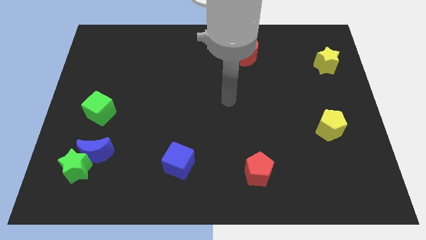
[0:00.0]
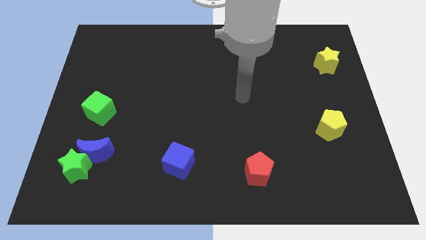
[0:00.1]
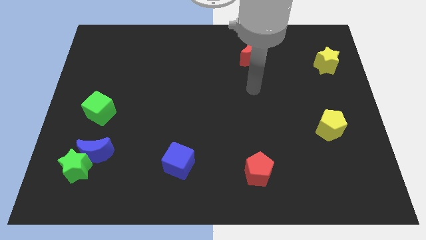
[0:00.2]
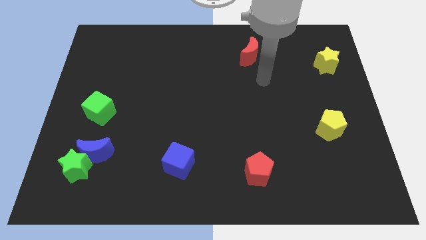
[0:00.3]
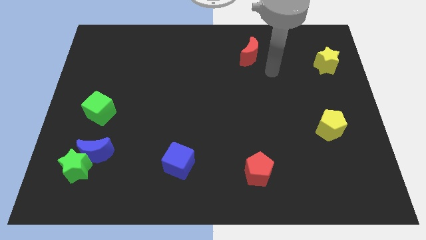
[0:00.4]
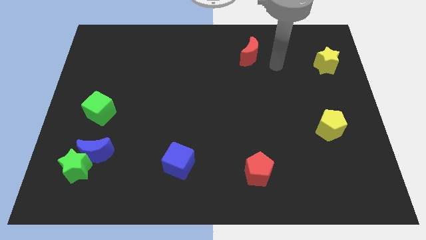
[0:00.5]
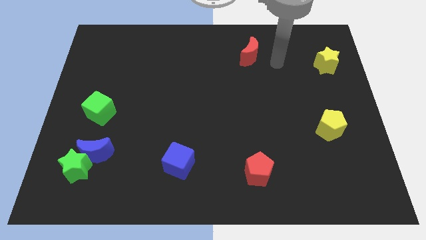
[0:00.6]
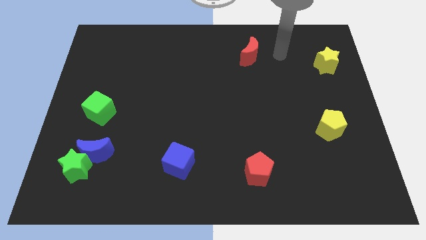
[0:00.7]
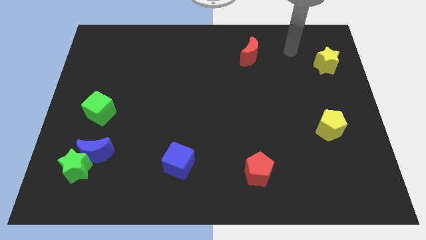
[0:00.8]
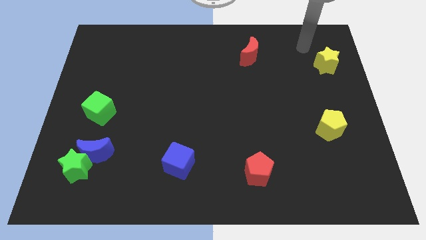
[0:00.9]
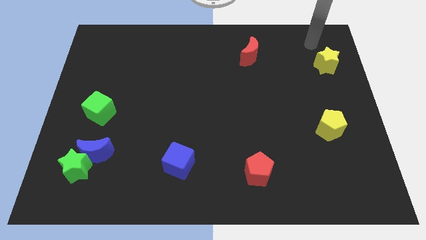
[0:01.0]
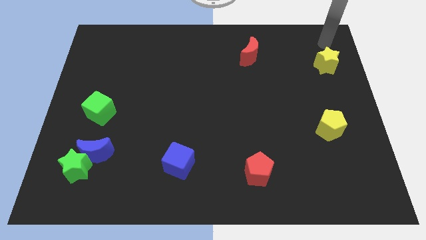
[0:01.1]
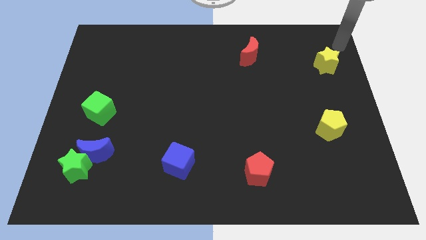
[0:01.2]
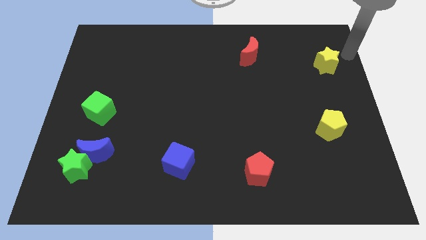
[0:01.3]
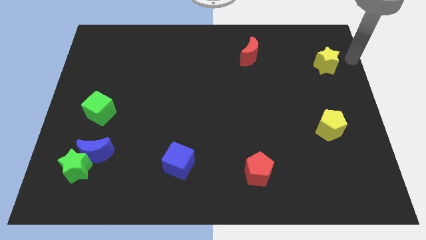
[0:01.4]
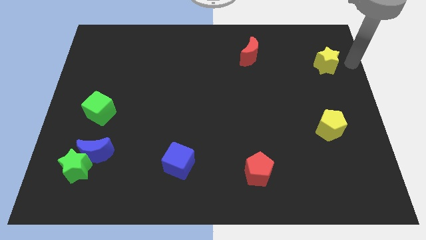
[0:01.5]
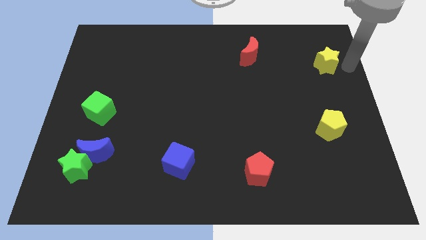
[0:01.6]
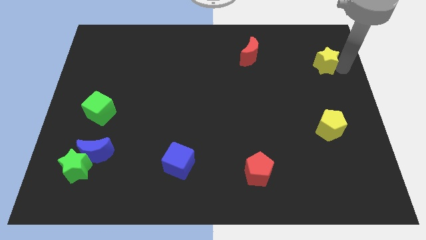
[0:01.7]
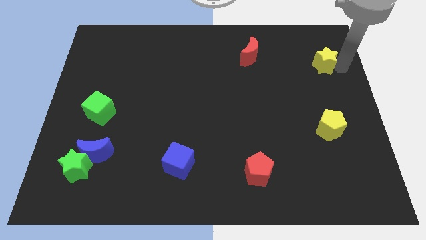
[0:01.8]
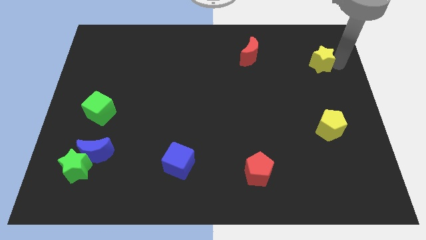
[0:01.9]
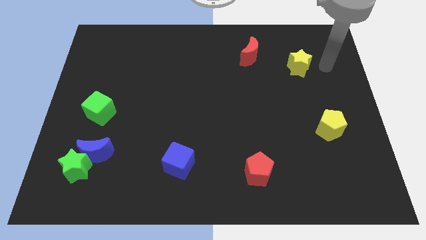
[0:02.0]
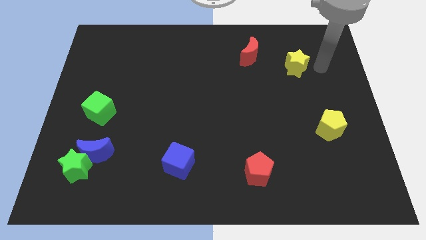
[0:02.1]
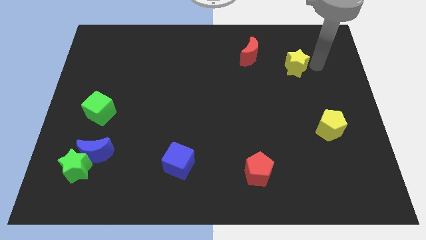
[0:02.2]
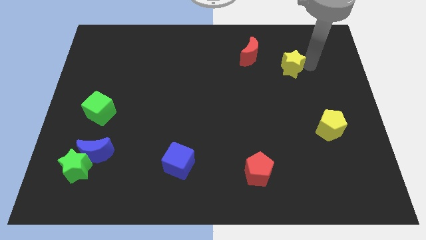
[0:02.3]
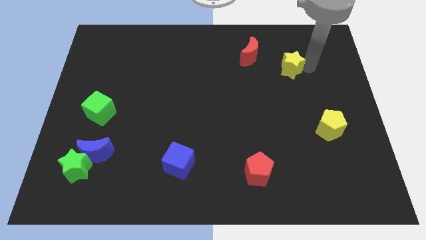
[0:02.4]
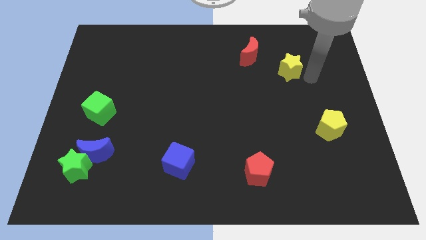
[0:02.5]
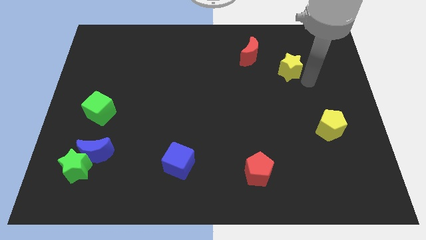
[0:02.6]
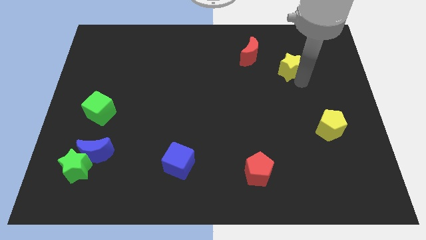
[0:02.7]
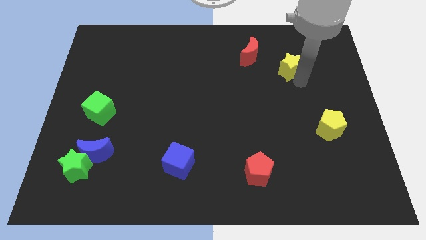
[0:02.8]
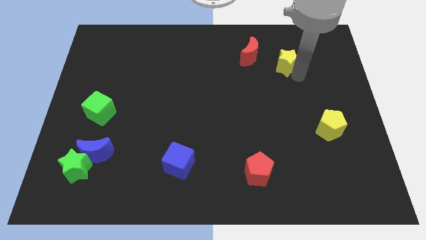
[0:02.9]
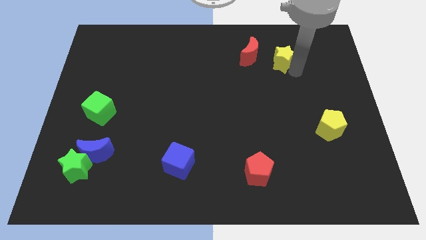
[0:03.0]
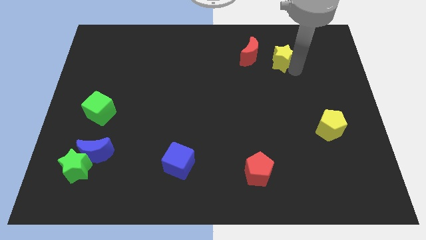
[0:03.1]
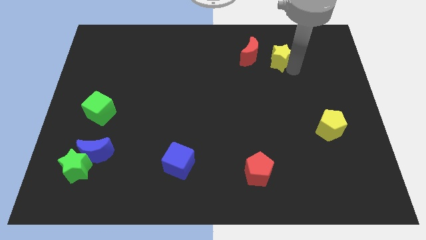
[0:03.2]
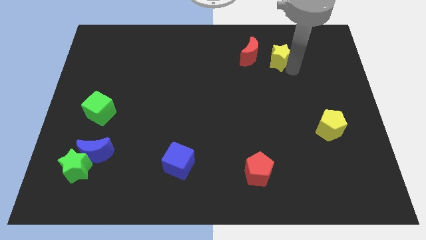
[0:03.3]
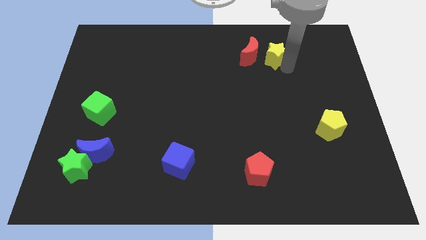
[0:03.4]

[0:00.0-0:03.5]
move the yellow star close to the red crescent

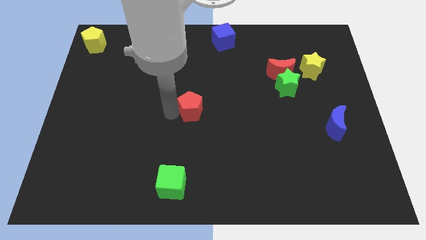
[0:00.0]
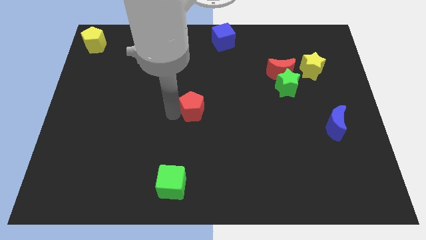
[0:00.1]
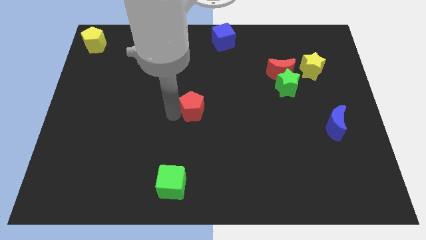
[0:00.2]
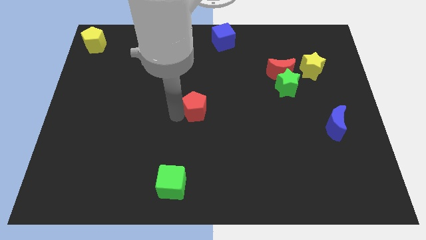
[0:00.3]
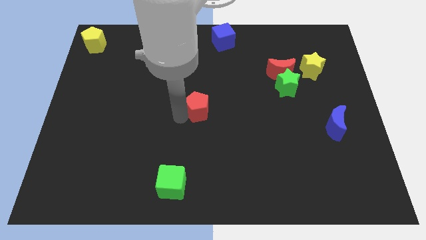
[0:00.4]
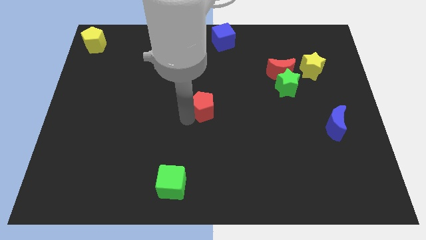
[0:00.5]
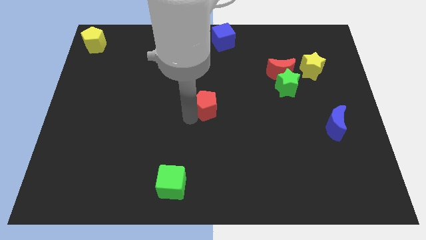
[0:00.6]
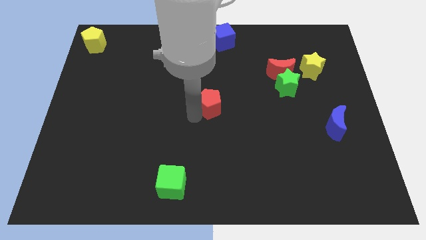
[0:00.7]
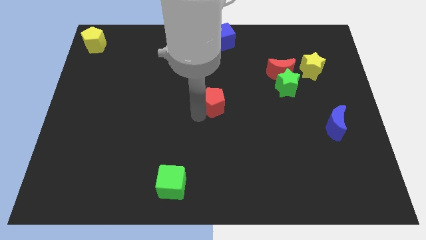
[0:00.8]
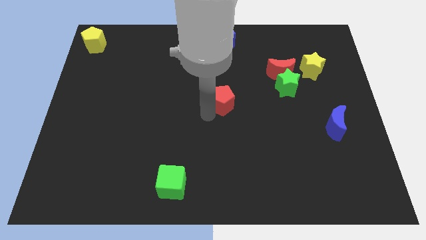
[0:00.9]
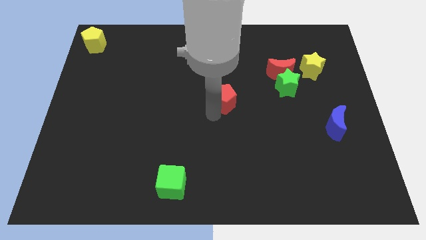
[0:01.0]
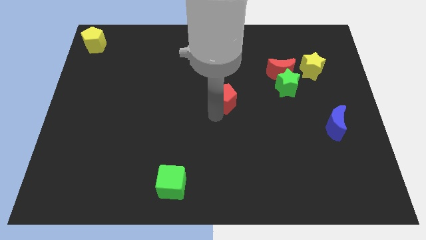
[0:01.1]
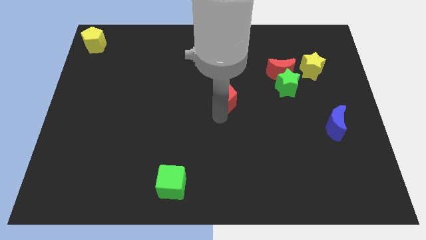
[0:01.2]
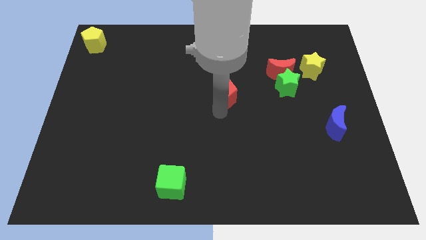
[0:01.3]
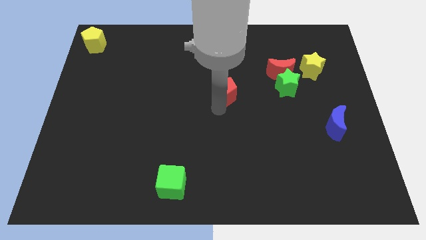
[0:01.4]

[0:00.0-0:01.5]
place the red pentagon to the center of the board

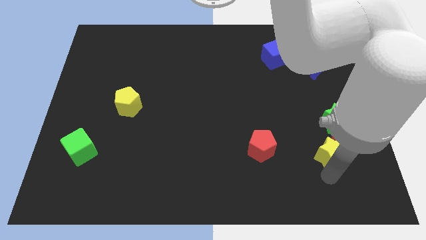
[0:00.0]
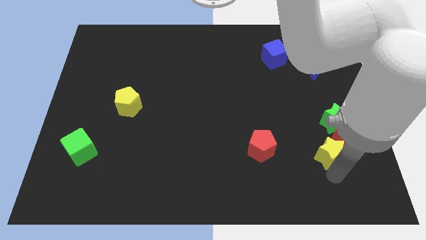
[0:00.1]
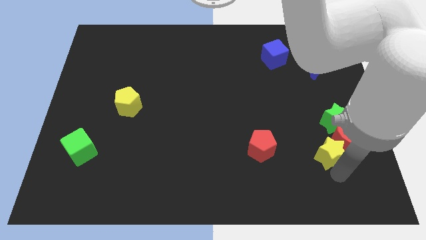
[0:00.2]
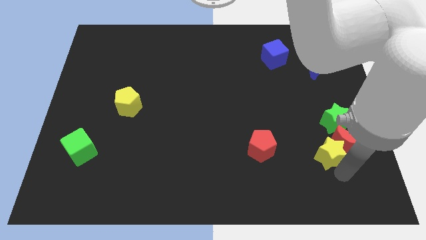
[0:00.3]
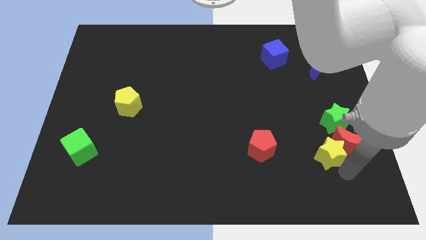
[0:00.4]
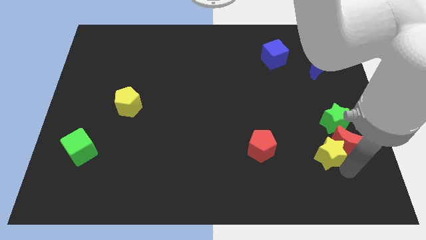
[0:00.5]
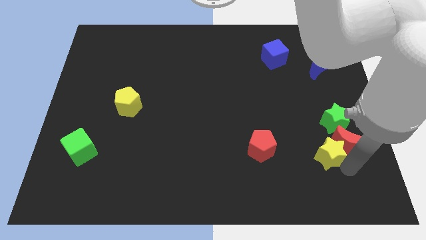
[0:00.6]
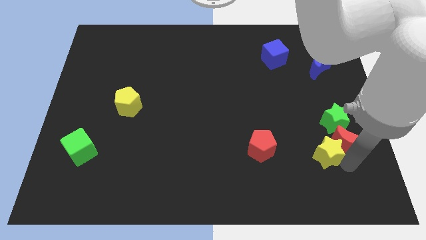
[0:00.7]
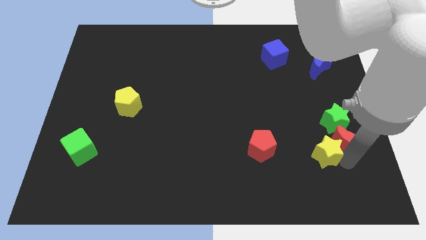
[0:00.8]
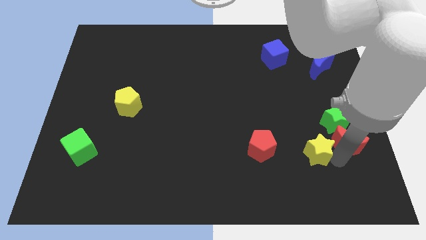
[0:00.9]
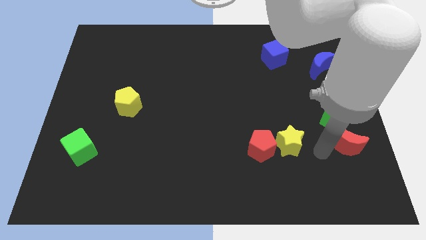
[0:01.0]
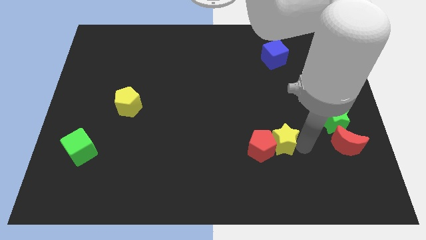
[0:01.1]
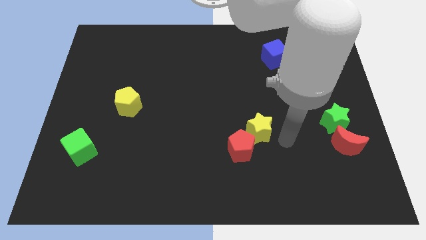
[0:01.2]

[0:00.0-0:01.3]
separate yellow star from red moon

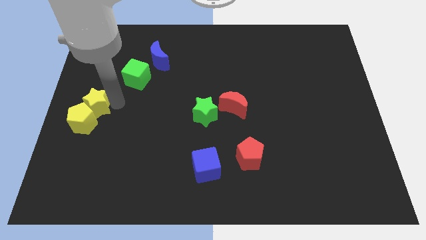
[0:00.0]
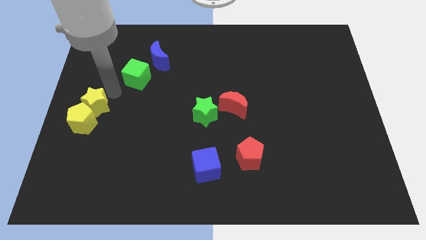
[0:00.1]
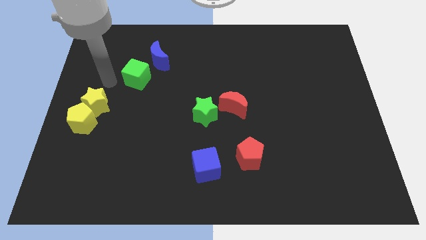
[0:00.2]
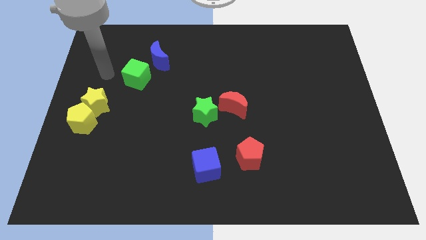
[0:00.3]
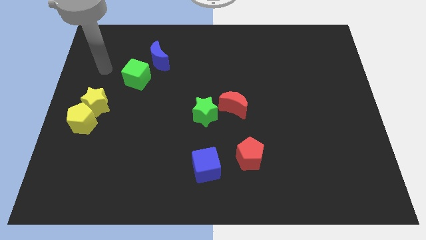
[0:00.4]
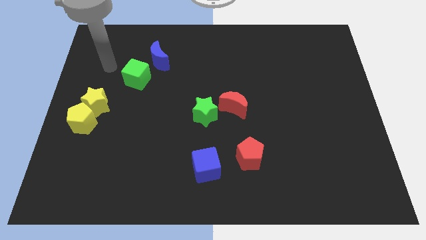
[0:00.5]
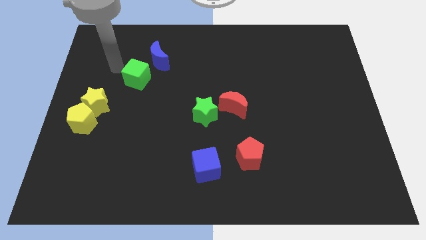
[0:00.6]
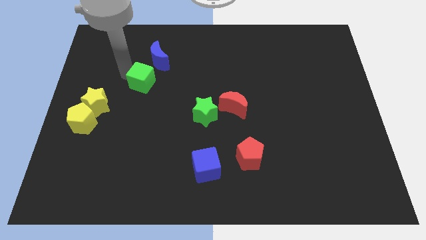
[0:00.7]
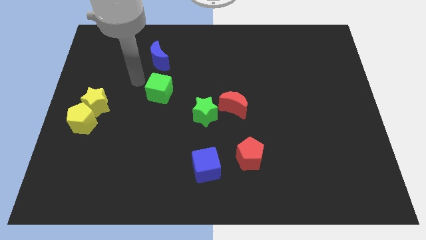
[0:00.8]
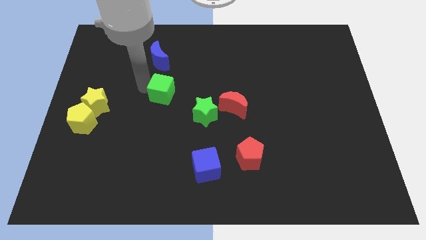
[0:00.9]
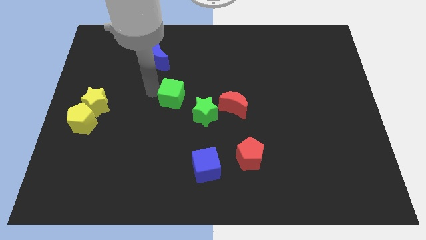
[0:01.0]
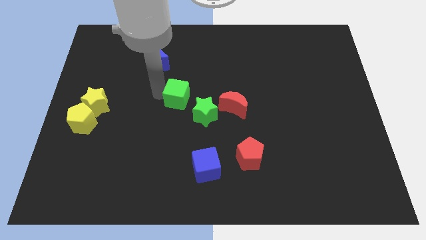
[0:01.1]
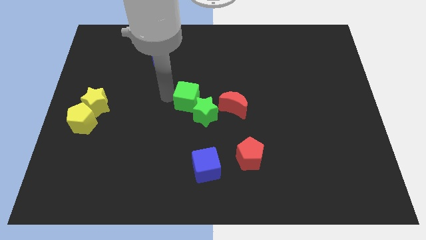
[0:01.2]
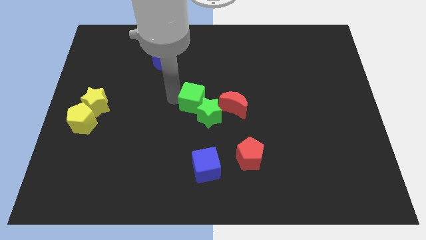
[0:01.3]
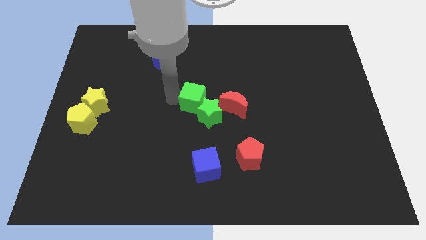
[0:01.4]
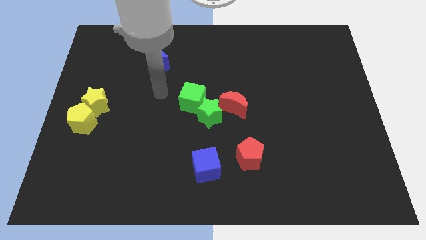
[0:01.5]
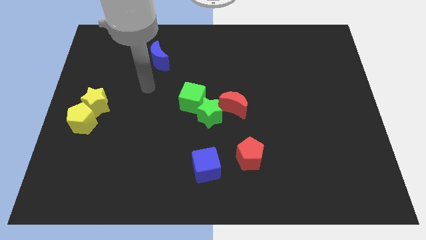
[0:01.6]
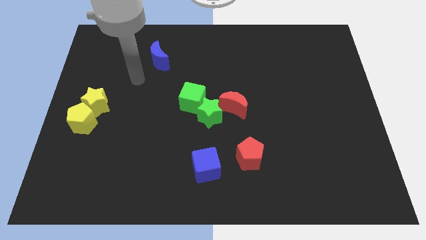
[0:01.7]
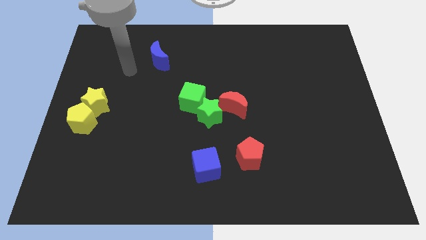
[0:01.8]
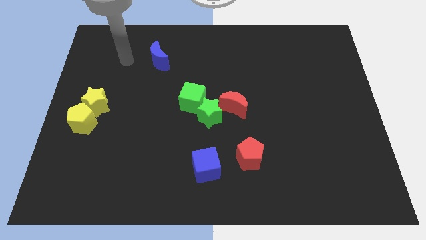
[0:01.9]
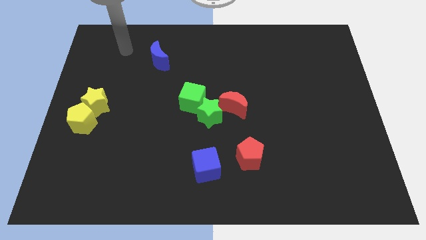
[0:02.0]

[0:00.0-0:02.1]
move green cube into green star

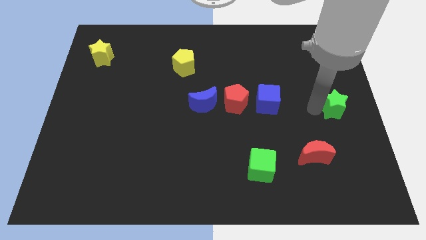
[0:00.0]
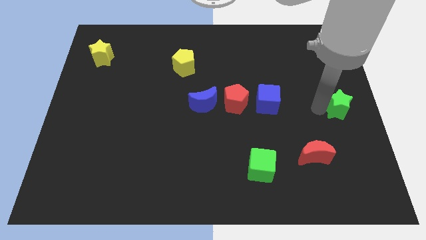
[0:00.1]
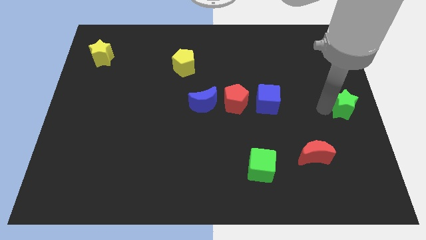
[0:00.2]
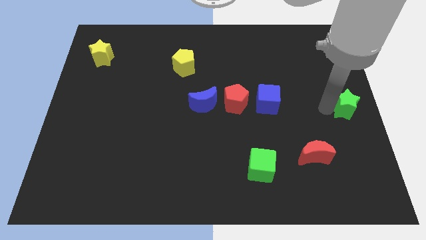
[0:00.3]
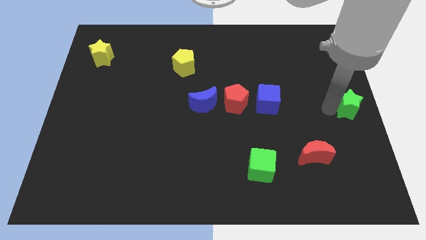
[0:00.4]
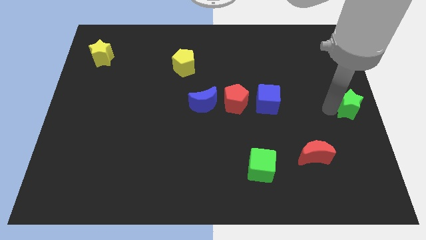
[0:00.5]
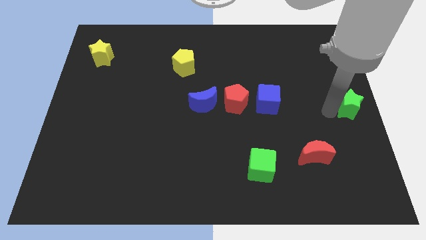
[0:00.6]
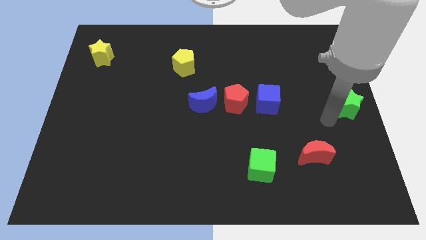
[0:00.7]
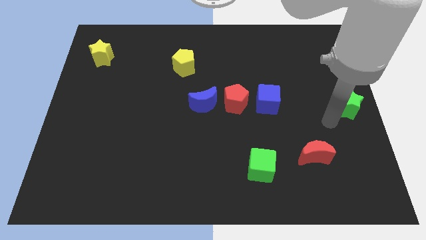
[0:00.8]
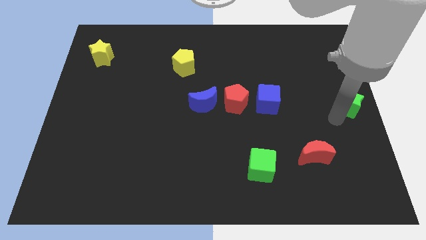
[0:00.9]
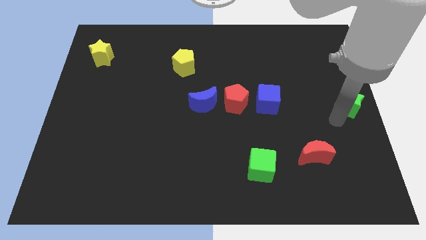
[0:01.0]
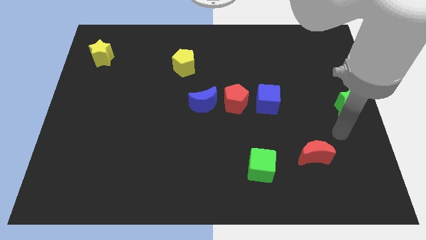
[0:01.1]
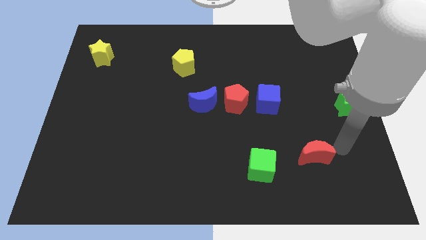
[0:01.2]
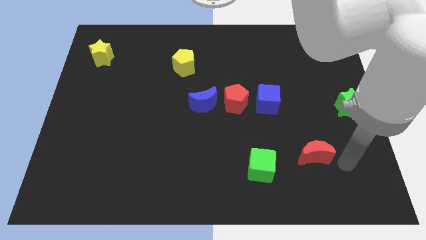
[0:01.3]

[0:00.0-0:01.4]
push the green star to the center right of the board
